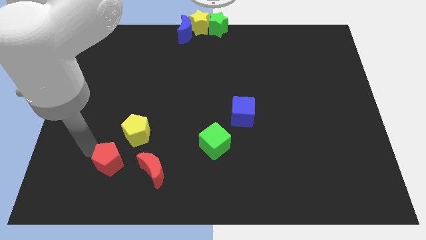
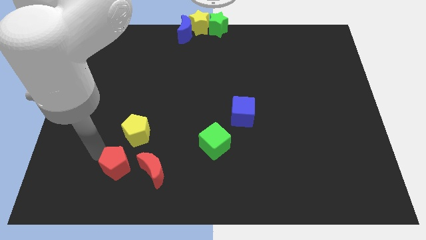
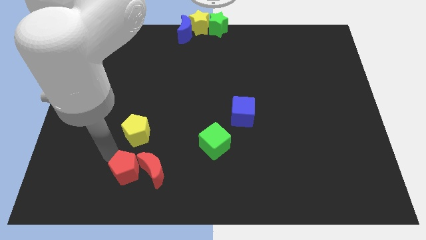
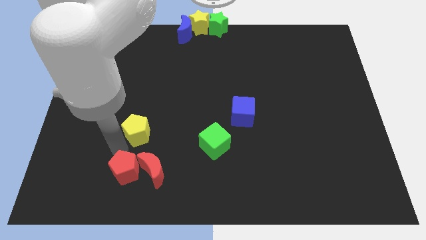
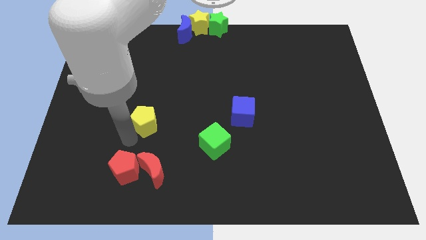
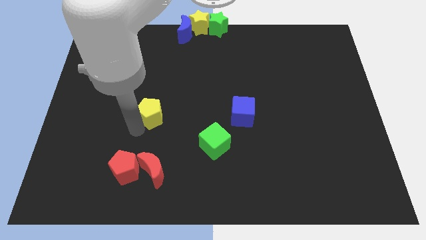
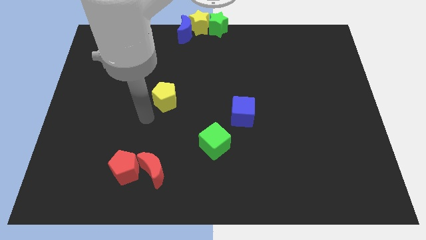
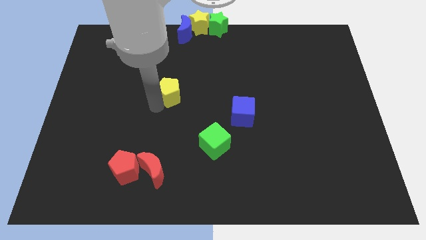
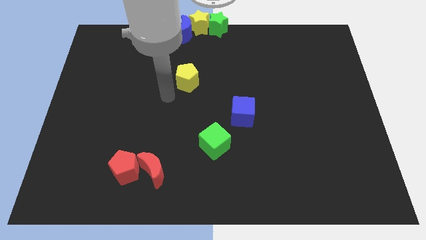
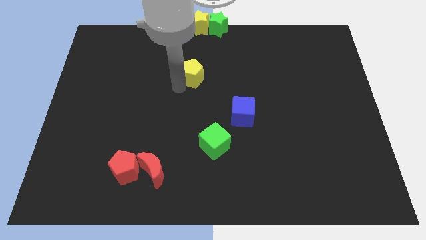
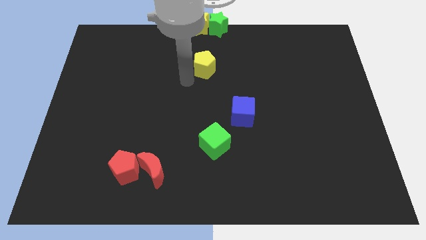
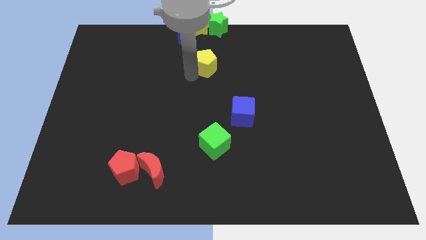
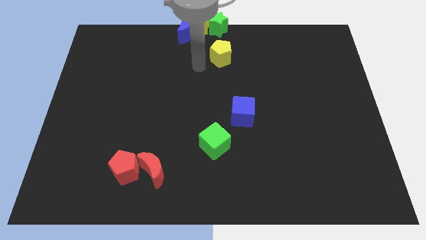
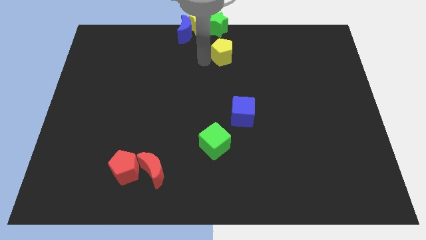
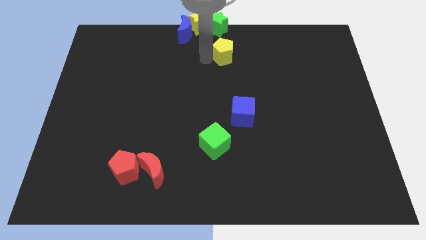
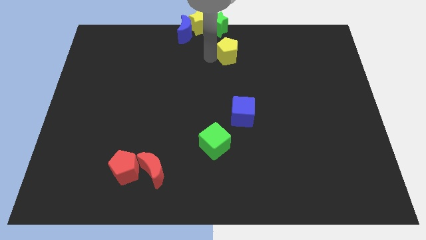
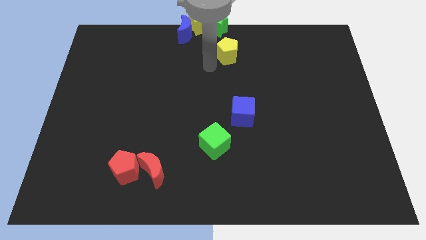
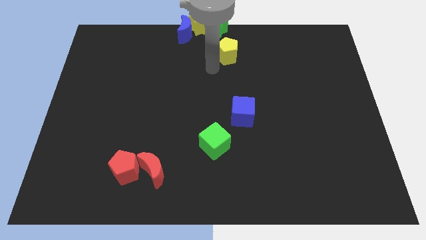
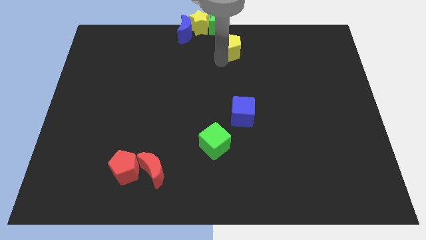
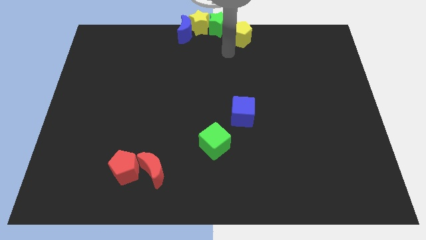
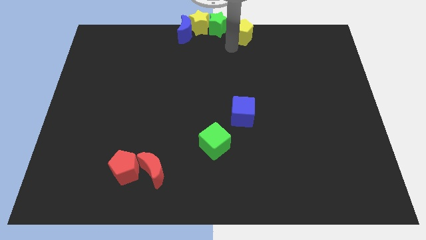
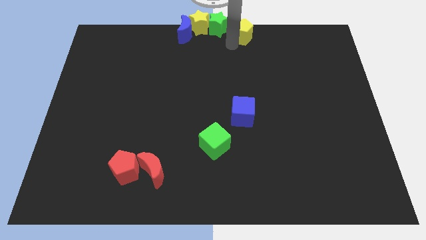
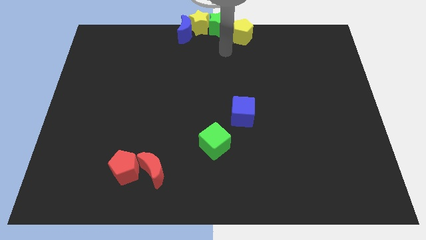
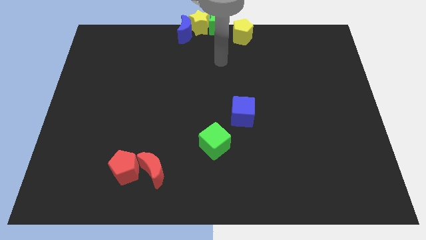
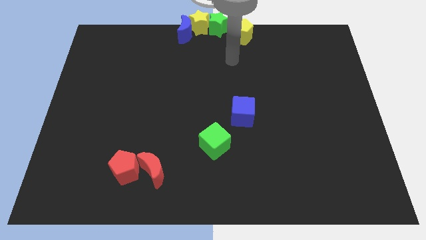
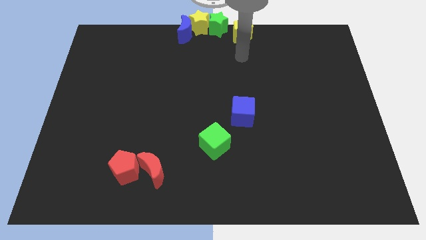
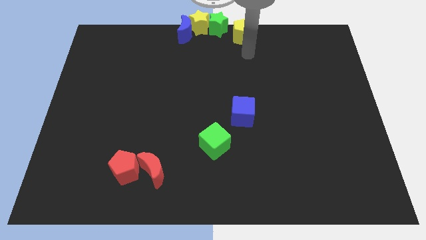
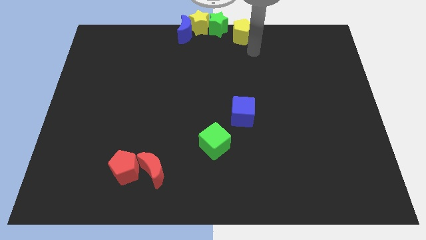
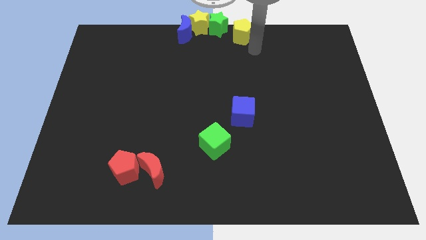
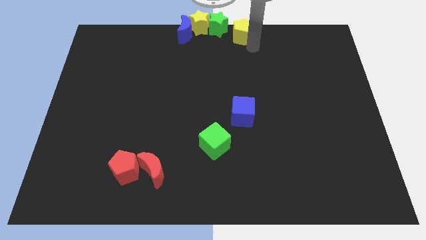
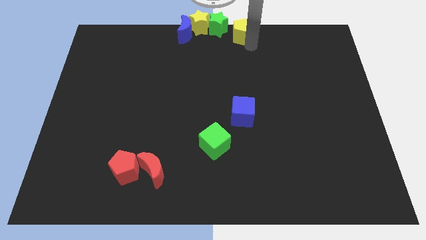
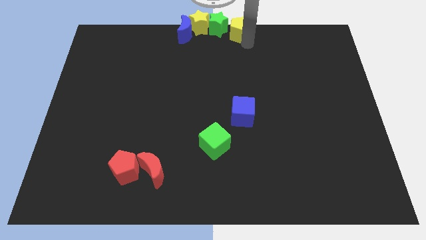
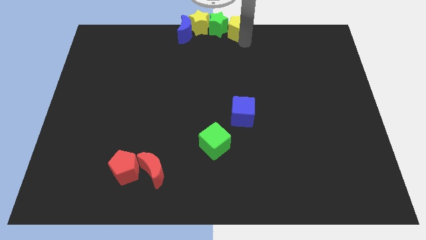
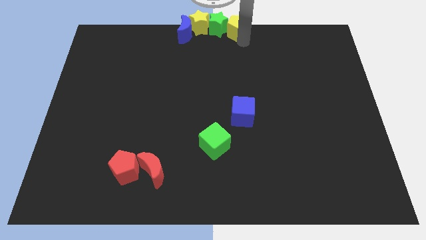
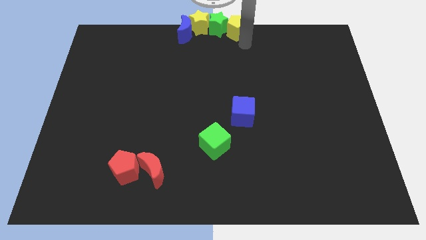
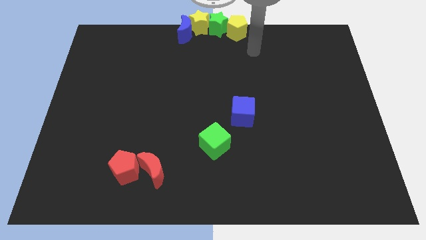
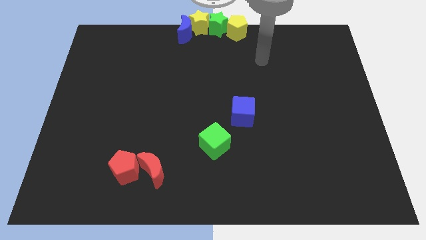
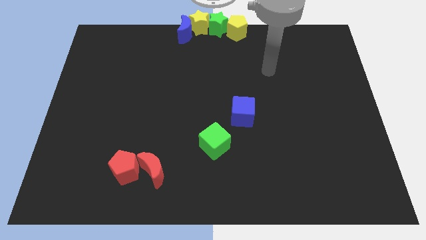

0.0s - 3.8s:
push the yellow pentagon to the right of the green star at the top center of the board

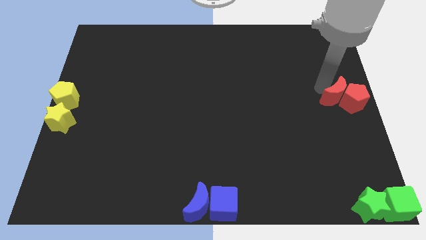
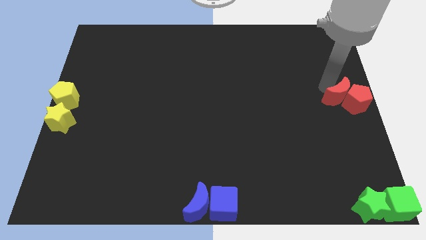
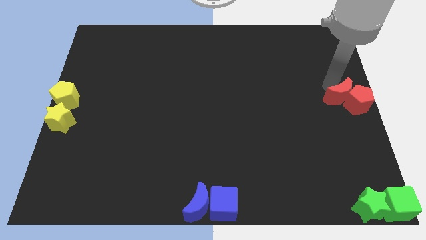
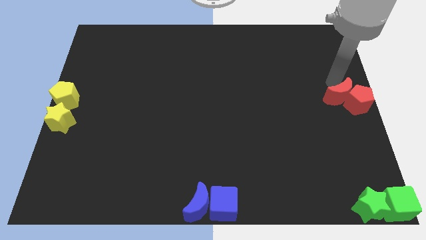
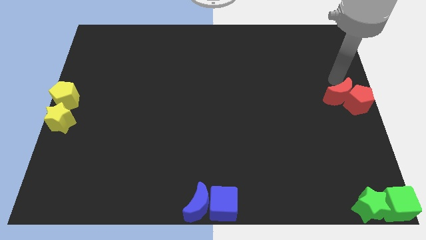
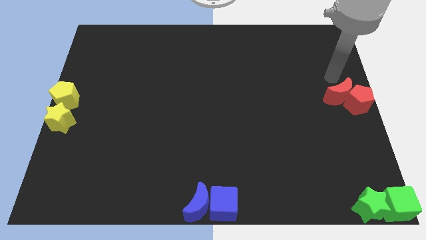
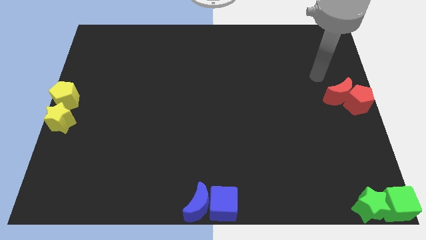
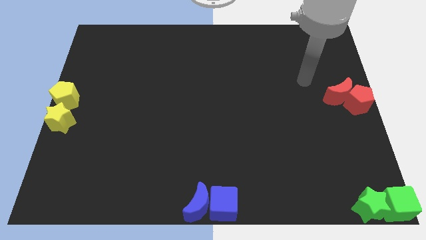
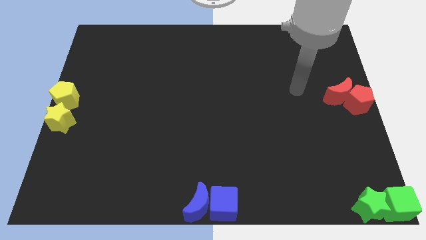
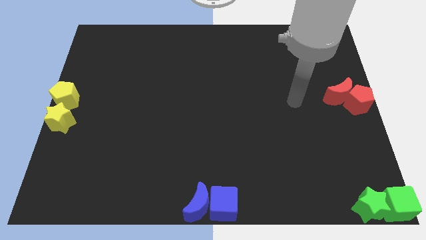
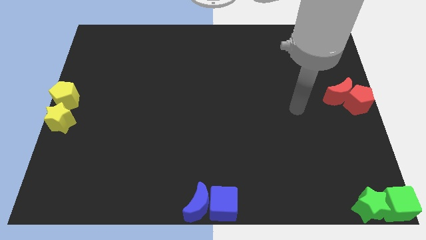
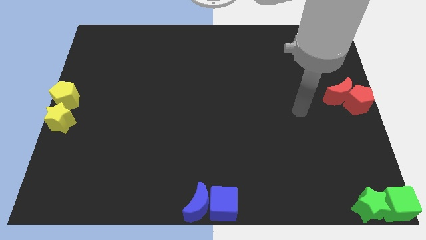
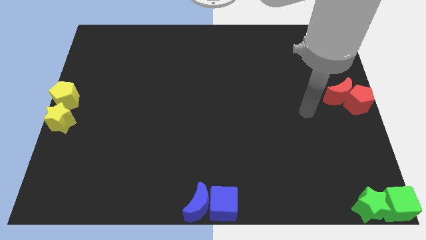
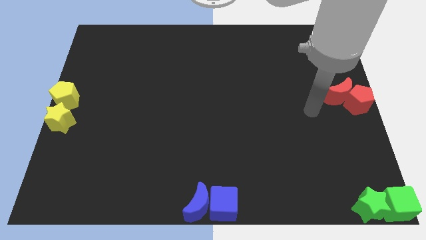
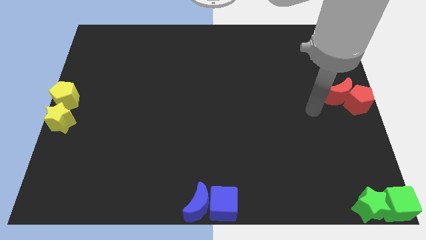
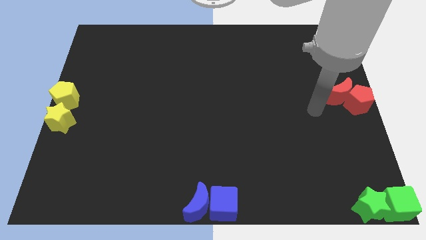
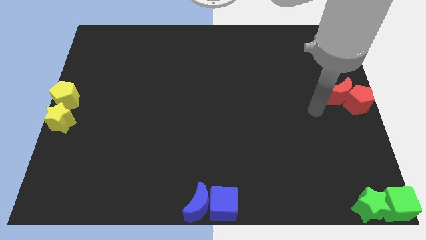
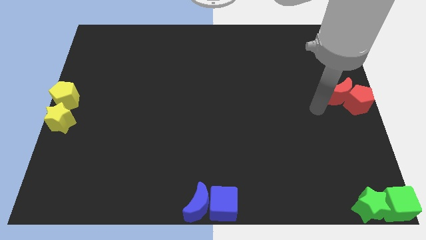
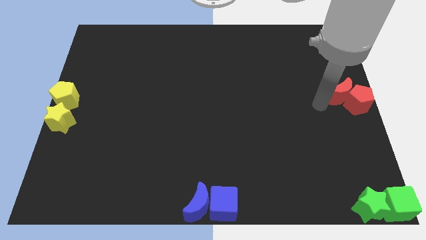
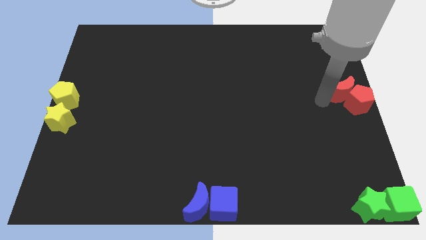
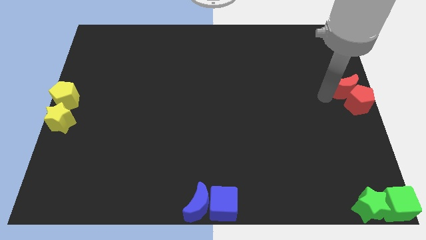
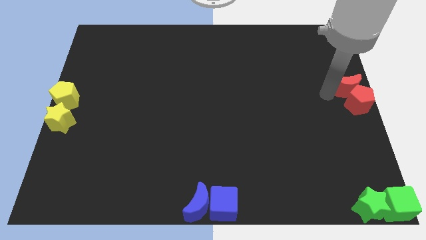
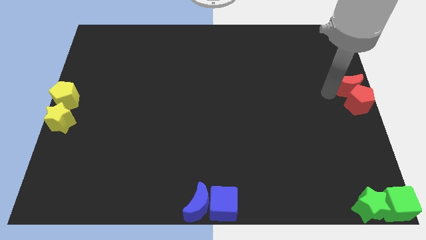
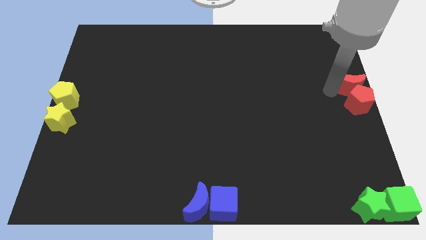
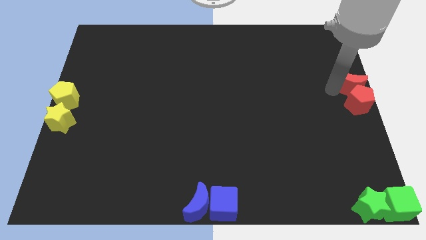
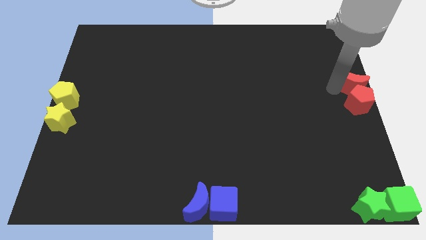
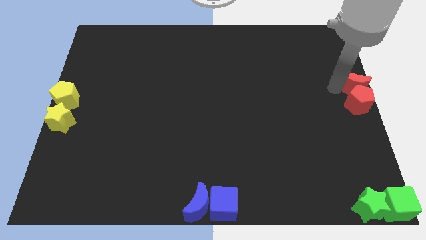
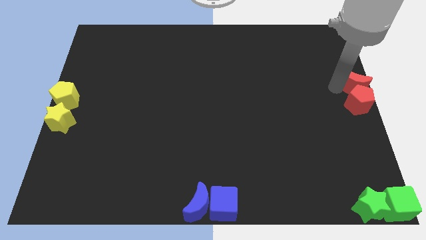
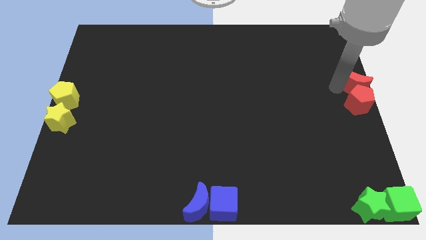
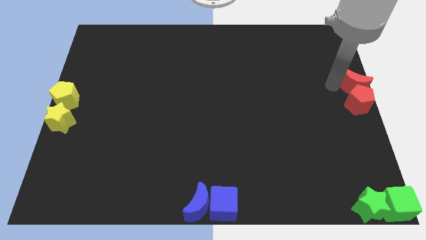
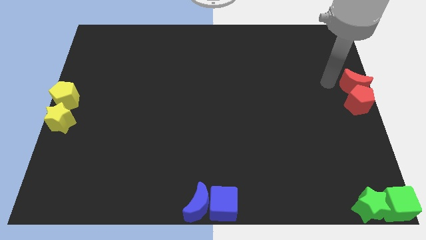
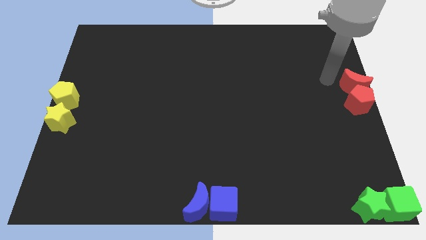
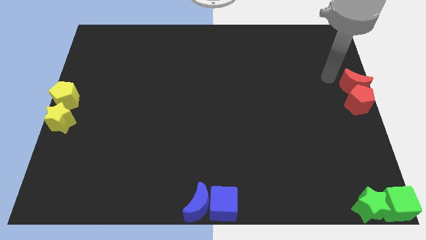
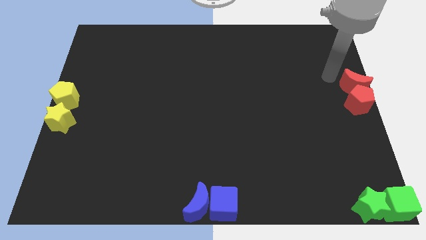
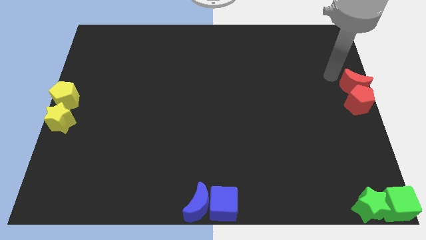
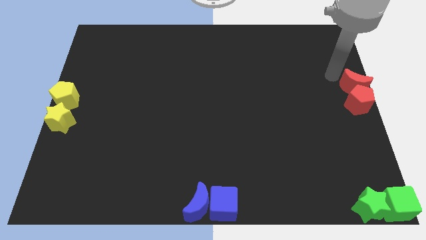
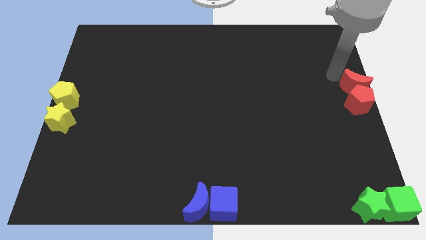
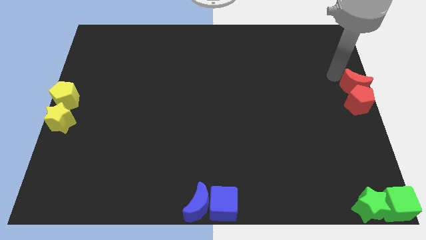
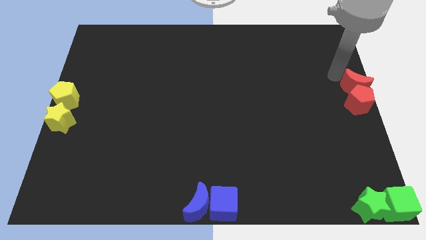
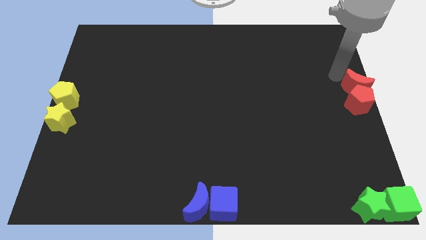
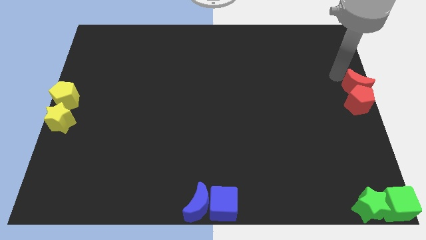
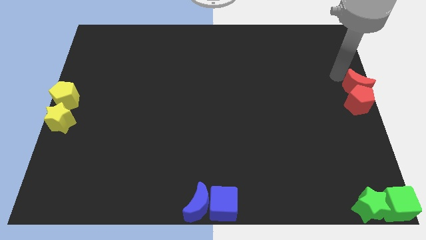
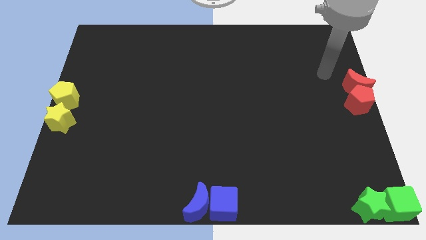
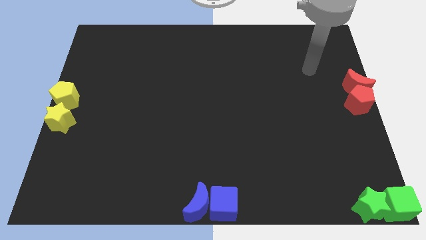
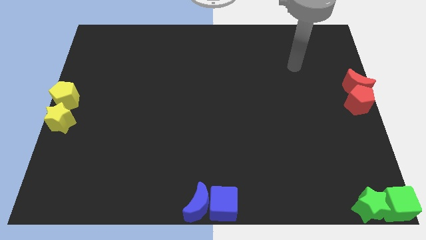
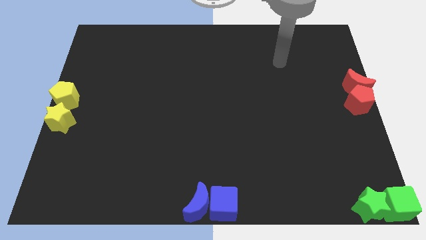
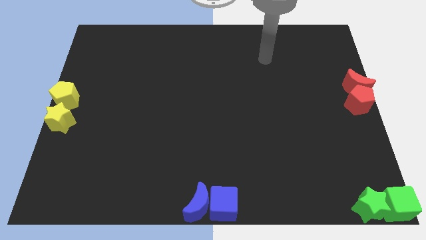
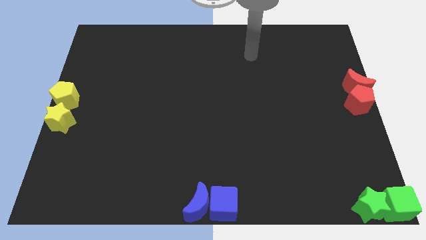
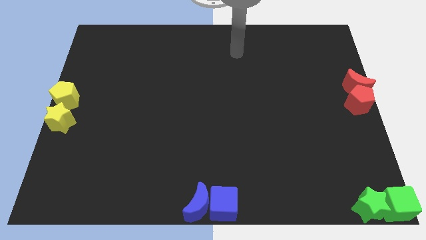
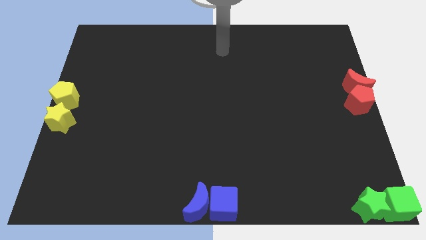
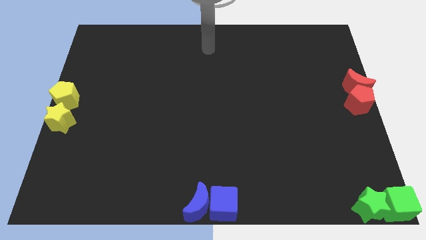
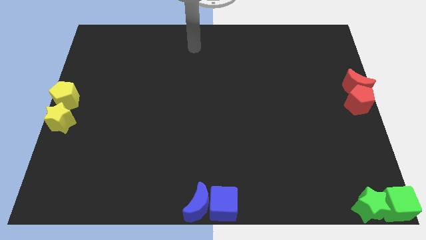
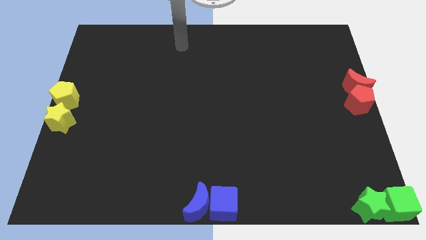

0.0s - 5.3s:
place the red moon to the top side of the red pentagon
